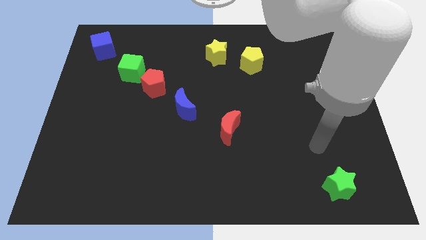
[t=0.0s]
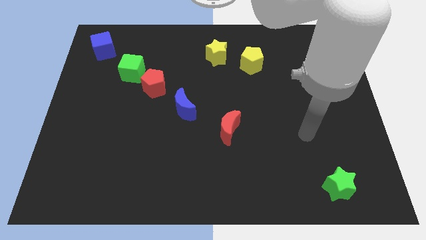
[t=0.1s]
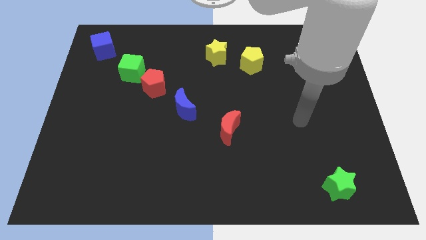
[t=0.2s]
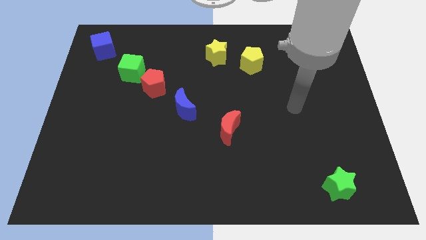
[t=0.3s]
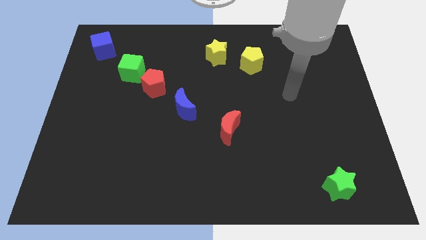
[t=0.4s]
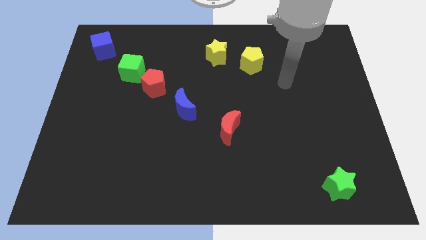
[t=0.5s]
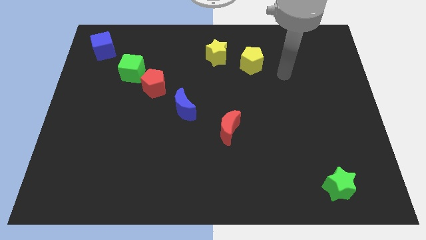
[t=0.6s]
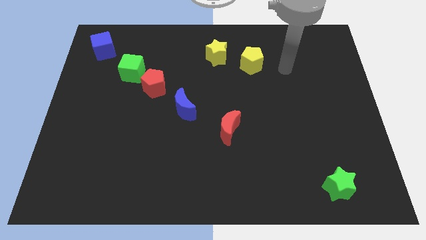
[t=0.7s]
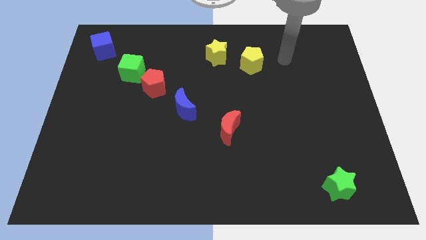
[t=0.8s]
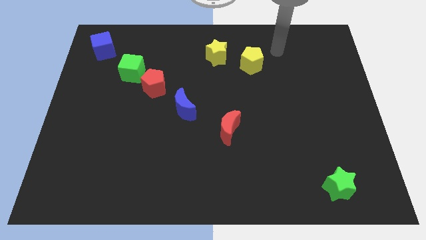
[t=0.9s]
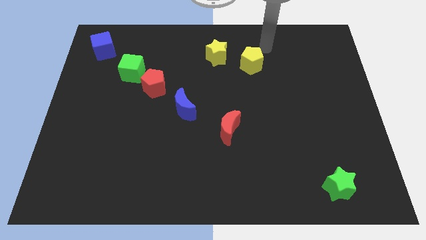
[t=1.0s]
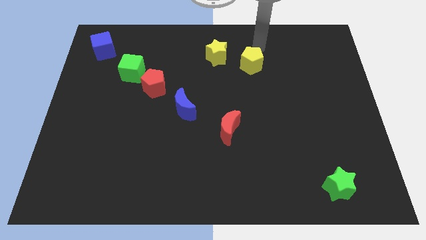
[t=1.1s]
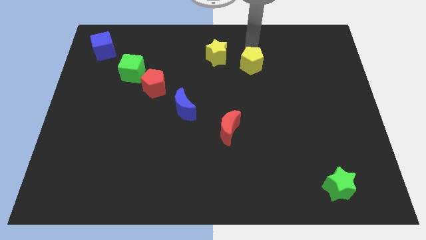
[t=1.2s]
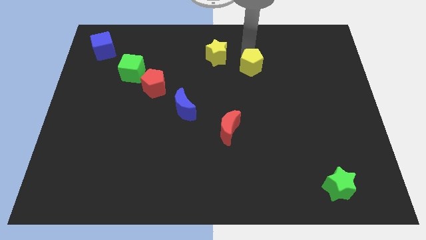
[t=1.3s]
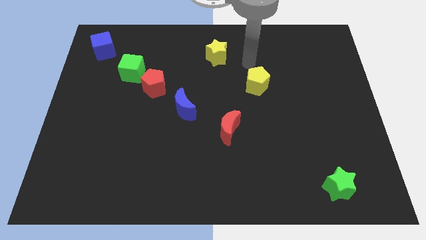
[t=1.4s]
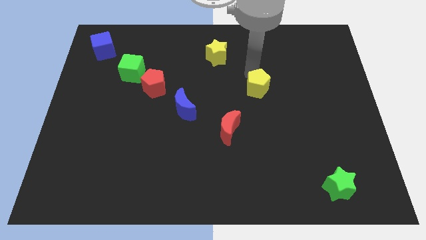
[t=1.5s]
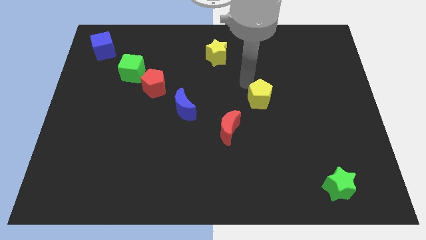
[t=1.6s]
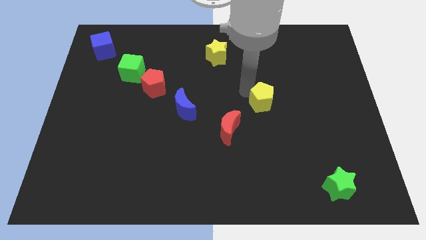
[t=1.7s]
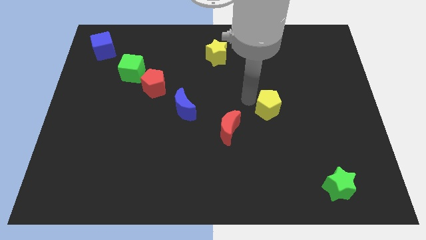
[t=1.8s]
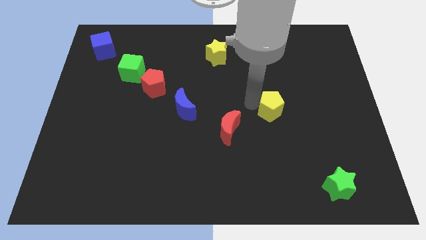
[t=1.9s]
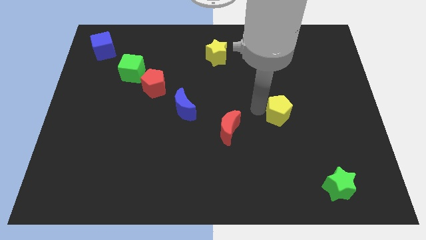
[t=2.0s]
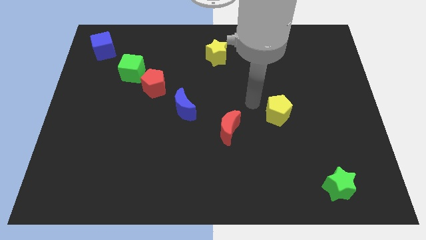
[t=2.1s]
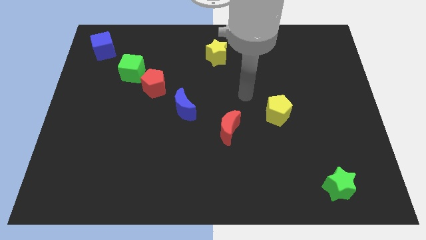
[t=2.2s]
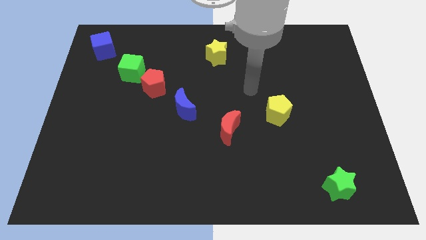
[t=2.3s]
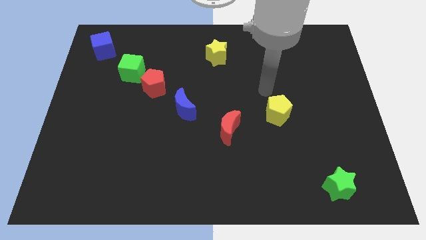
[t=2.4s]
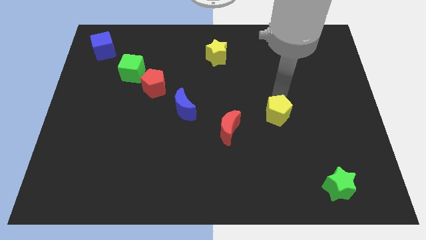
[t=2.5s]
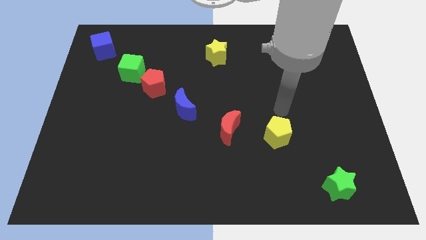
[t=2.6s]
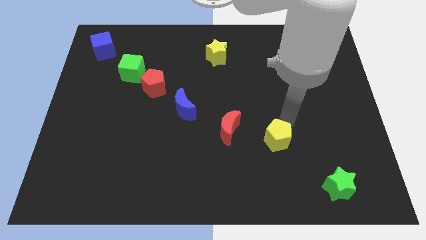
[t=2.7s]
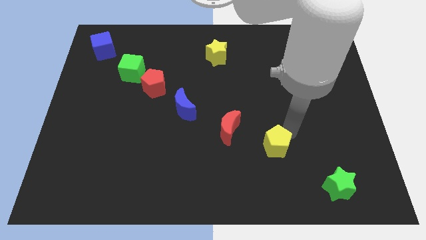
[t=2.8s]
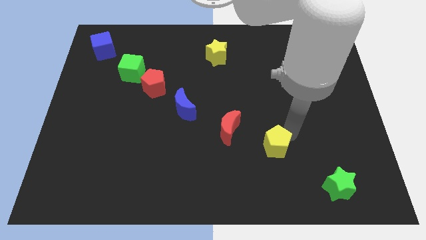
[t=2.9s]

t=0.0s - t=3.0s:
push the yellow pentagon to the right of the red crescent

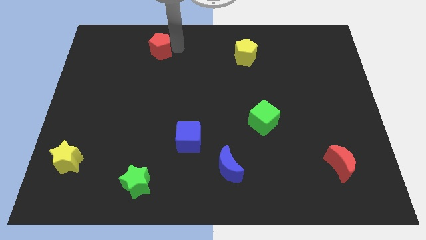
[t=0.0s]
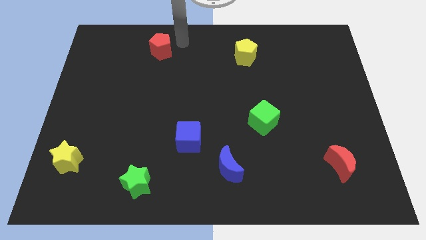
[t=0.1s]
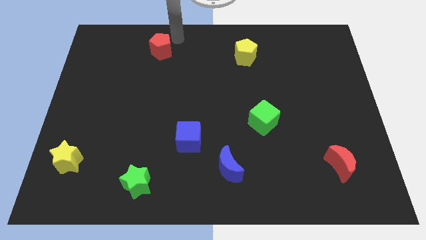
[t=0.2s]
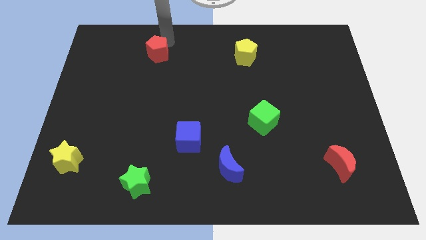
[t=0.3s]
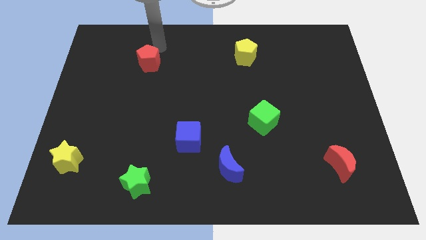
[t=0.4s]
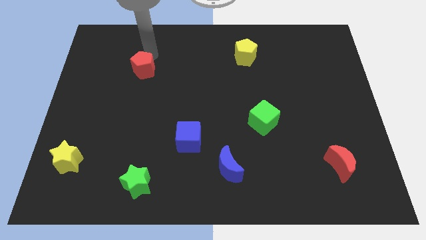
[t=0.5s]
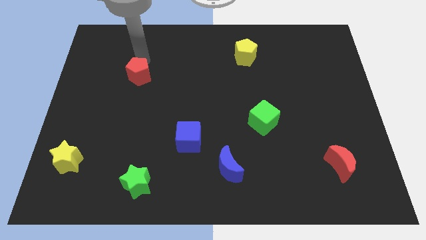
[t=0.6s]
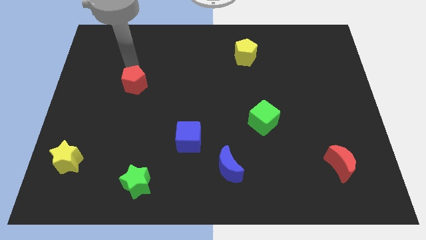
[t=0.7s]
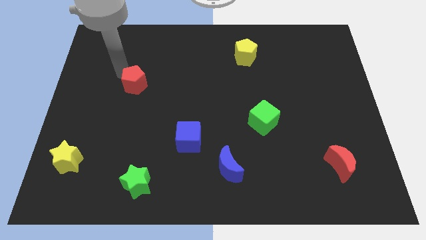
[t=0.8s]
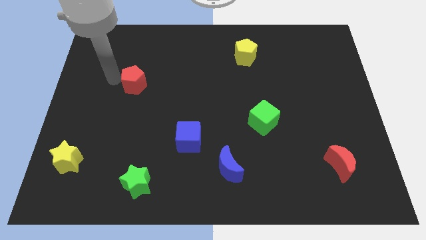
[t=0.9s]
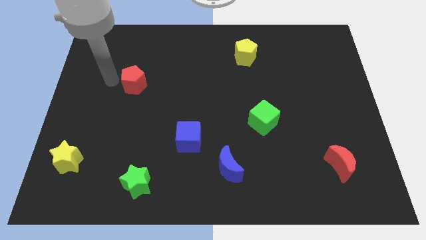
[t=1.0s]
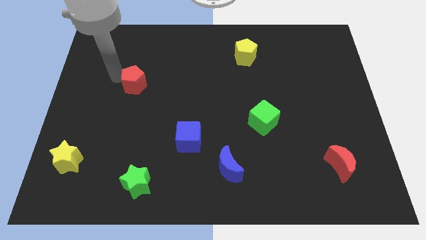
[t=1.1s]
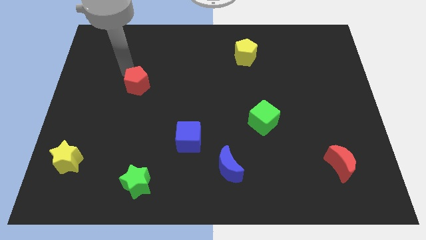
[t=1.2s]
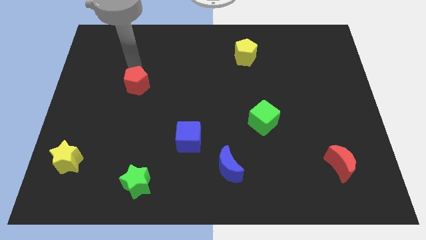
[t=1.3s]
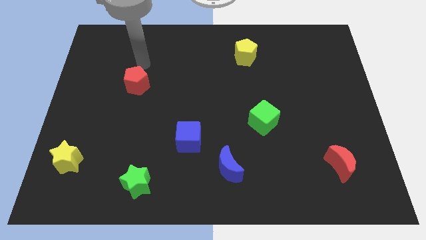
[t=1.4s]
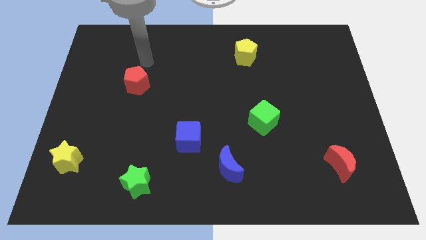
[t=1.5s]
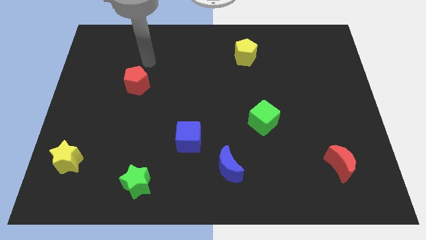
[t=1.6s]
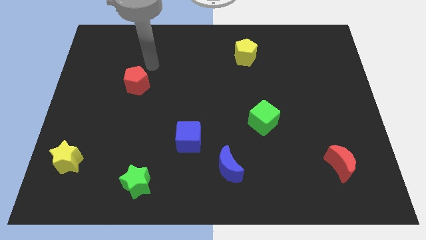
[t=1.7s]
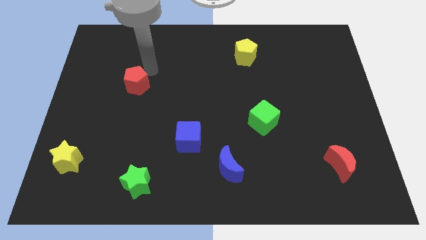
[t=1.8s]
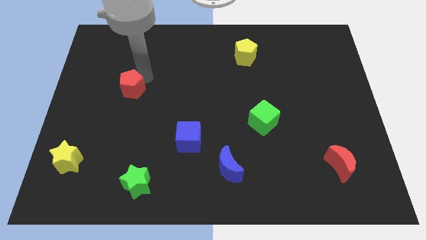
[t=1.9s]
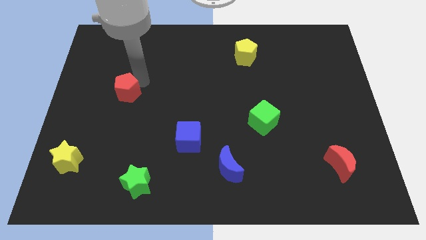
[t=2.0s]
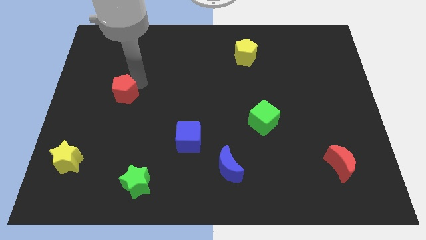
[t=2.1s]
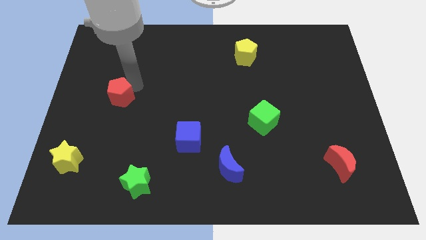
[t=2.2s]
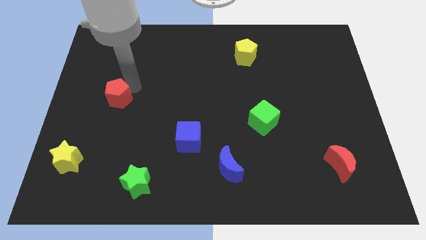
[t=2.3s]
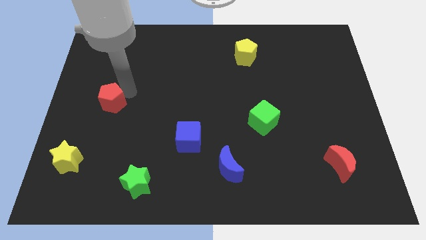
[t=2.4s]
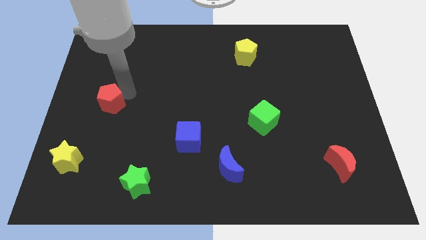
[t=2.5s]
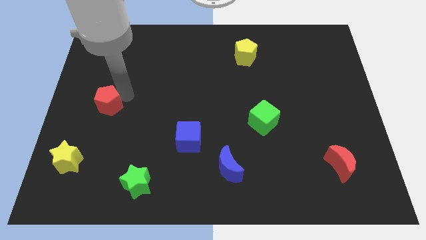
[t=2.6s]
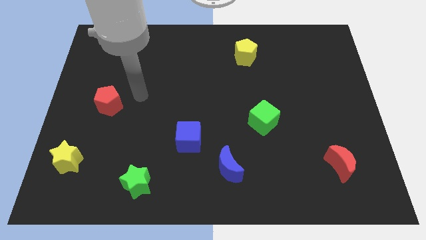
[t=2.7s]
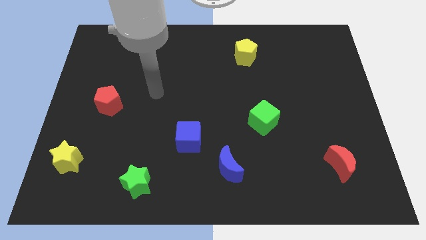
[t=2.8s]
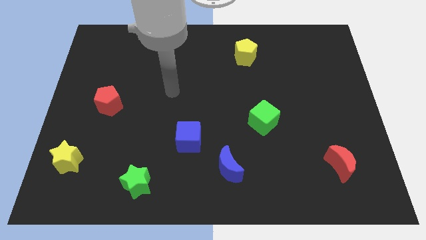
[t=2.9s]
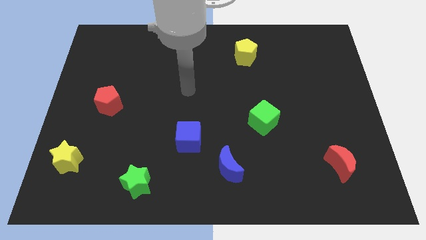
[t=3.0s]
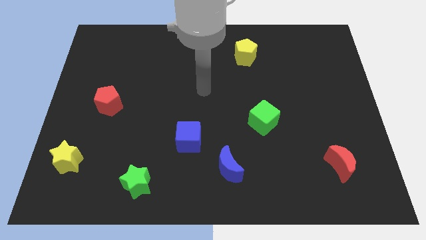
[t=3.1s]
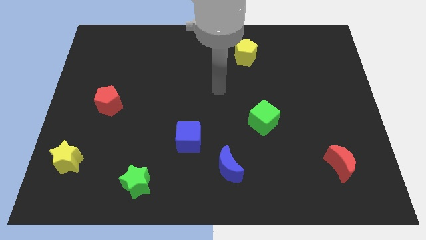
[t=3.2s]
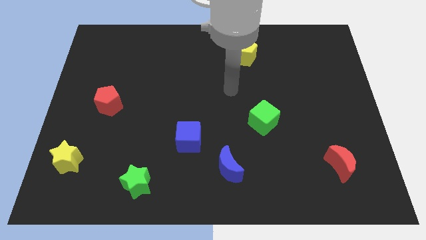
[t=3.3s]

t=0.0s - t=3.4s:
push the red penatgon slightly down towards the yellow star

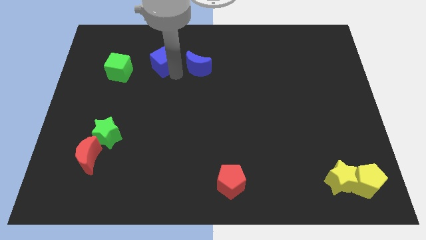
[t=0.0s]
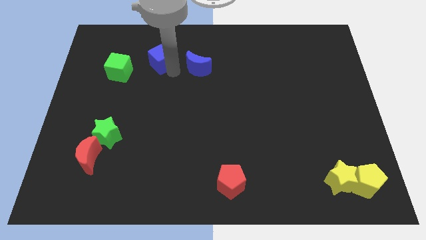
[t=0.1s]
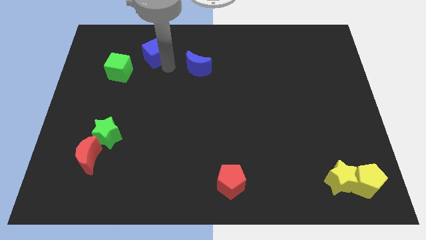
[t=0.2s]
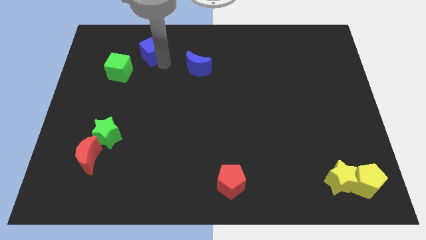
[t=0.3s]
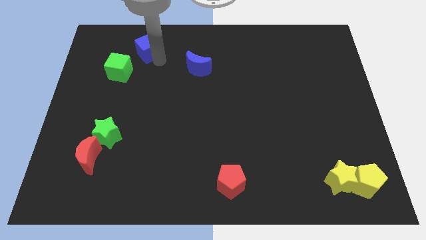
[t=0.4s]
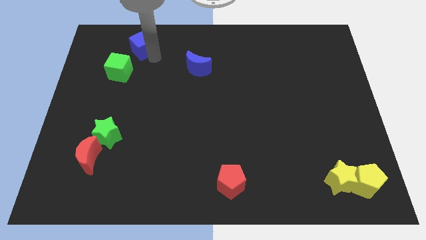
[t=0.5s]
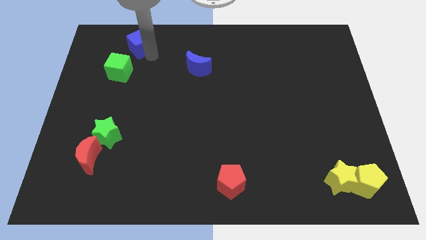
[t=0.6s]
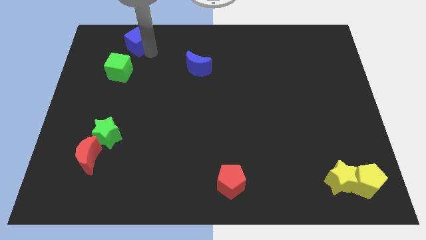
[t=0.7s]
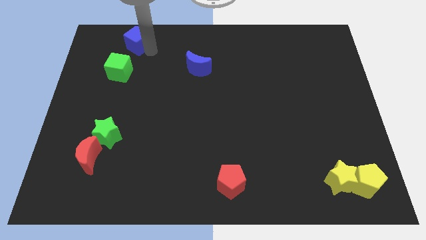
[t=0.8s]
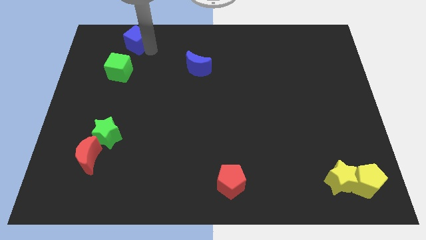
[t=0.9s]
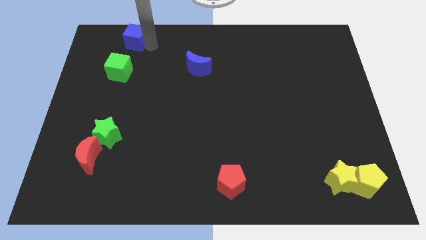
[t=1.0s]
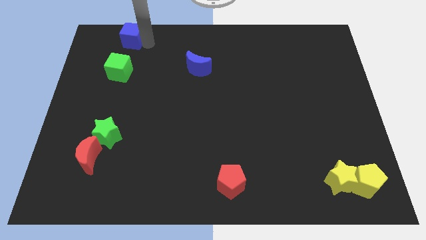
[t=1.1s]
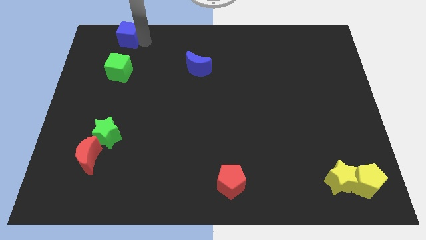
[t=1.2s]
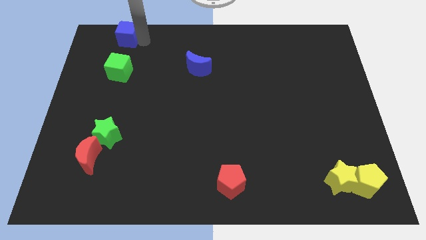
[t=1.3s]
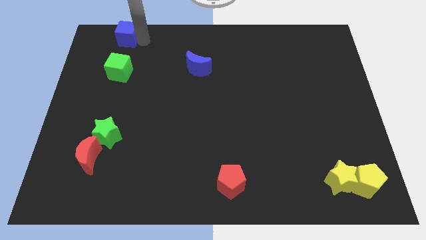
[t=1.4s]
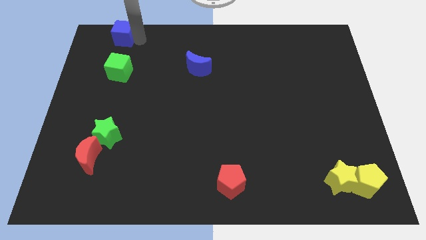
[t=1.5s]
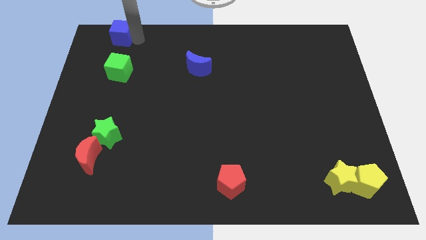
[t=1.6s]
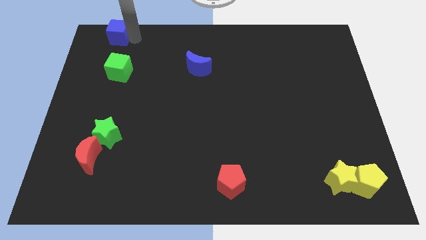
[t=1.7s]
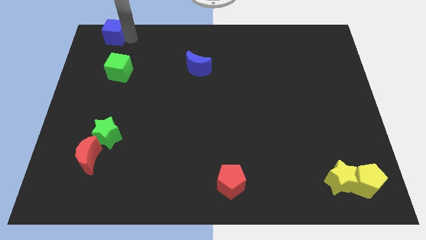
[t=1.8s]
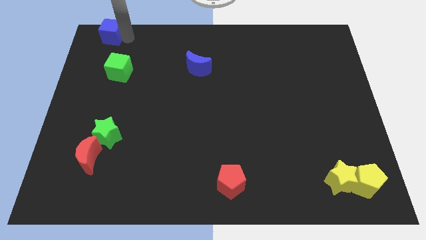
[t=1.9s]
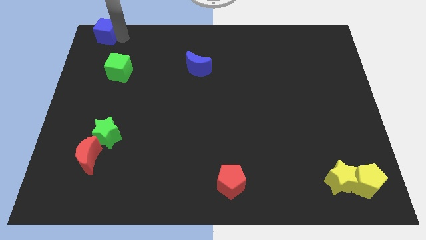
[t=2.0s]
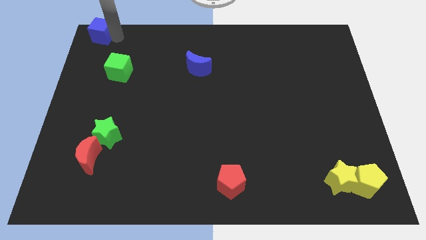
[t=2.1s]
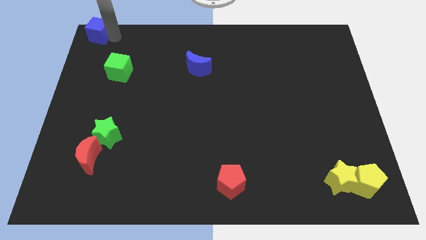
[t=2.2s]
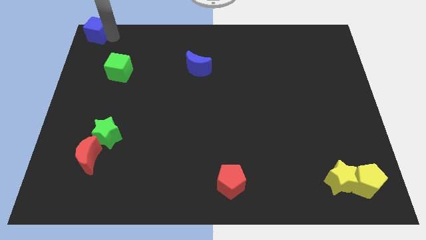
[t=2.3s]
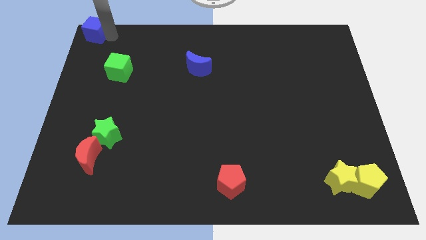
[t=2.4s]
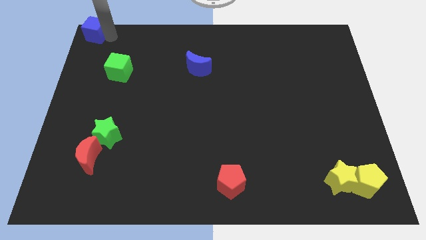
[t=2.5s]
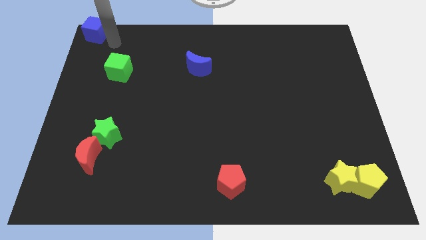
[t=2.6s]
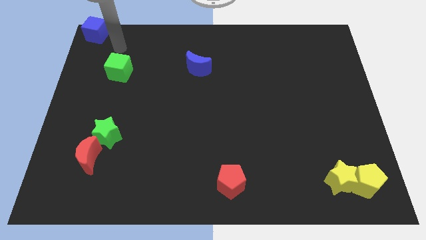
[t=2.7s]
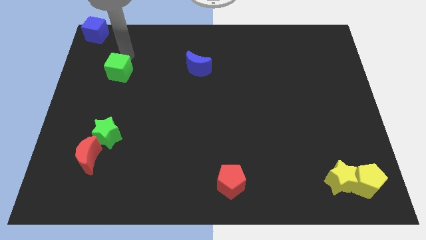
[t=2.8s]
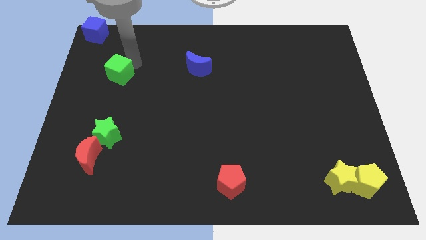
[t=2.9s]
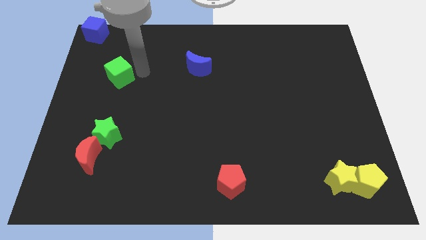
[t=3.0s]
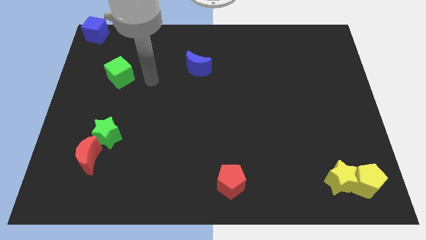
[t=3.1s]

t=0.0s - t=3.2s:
move the blue cube to the top left corner
